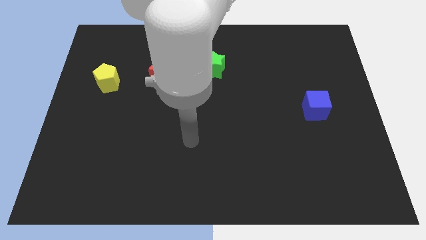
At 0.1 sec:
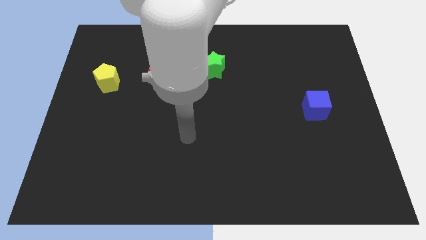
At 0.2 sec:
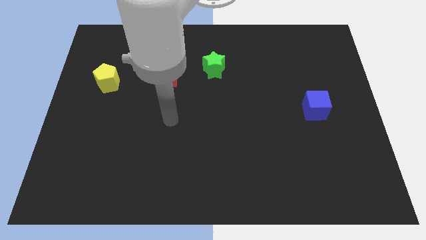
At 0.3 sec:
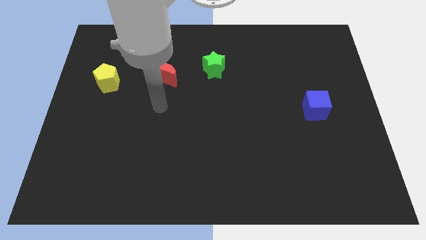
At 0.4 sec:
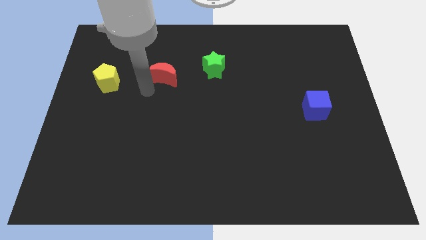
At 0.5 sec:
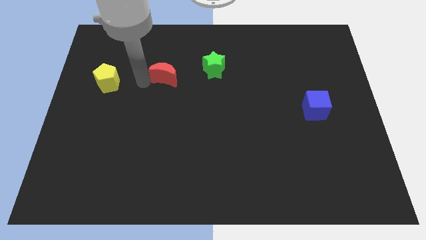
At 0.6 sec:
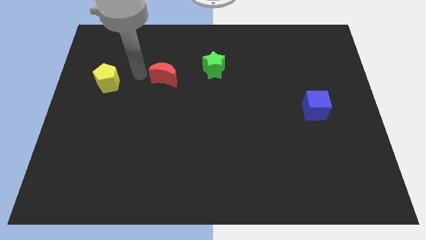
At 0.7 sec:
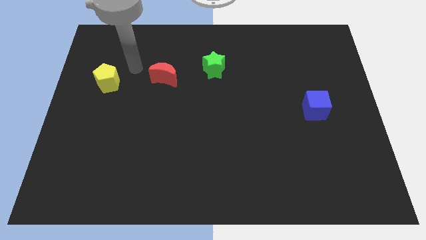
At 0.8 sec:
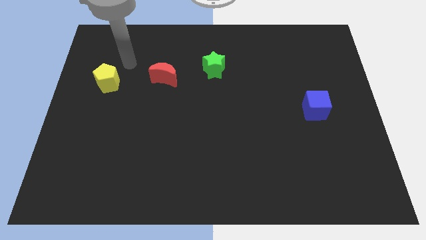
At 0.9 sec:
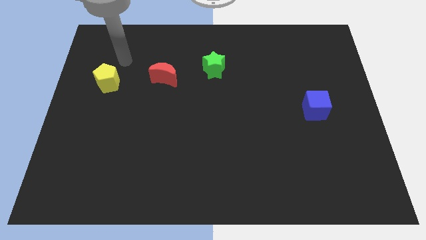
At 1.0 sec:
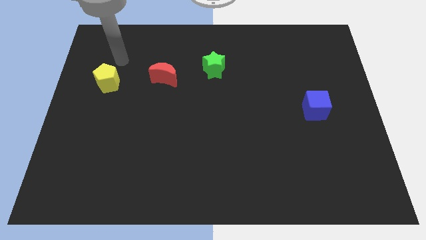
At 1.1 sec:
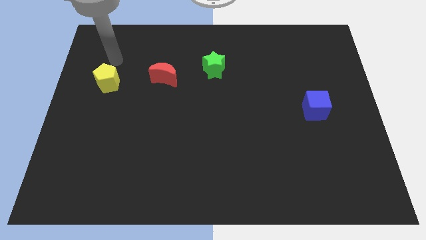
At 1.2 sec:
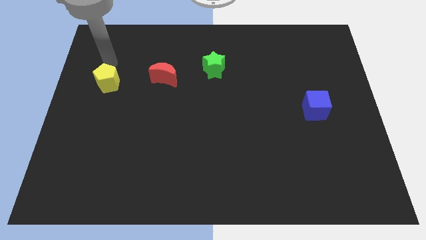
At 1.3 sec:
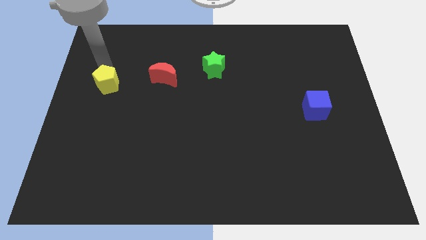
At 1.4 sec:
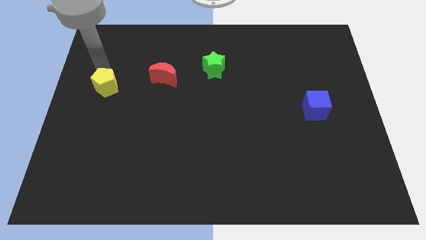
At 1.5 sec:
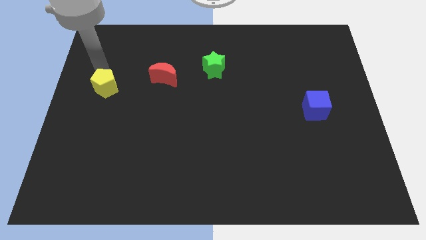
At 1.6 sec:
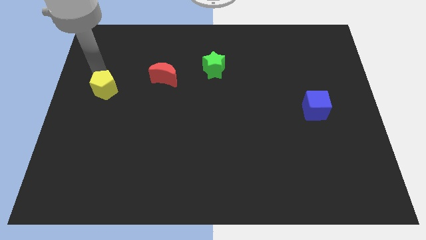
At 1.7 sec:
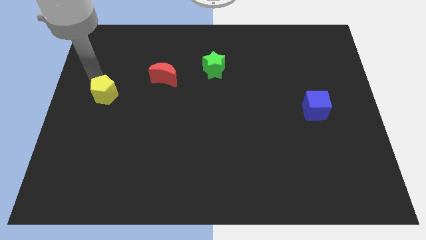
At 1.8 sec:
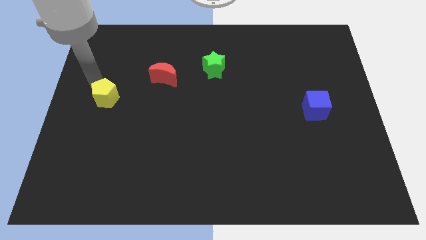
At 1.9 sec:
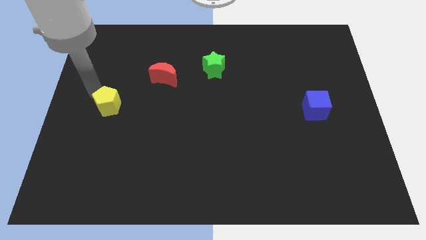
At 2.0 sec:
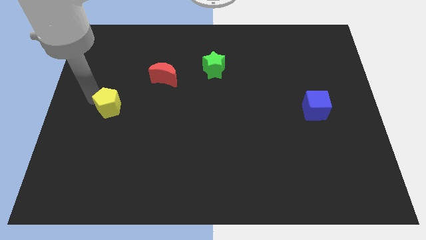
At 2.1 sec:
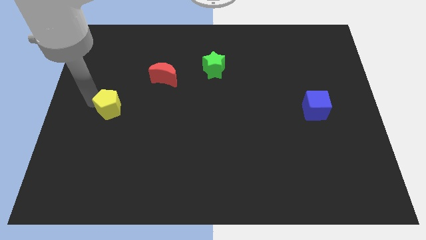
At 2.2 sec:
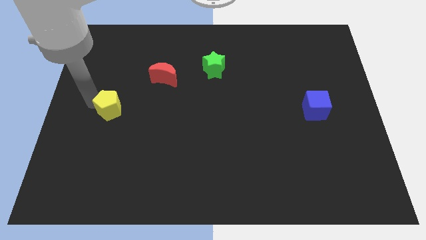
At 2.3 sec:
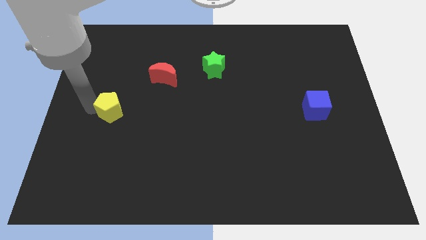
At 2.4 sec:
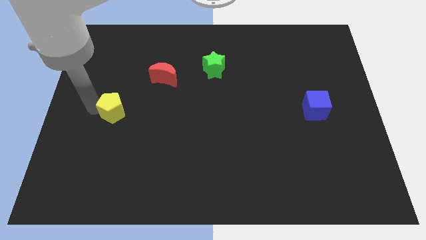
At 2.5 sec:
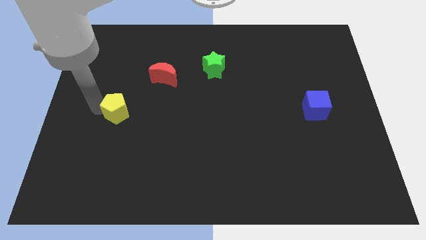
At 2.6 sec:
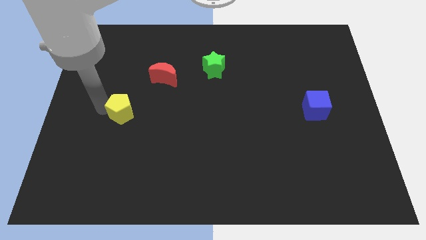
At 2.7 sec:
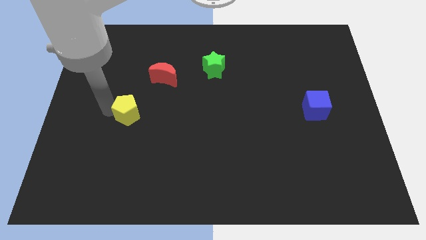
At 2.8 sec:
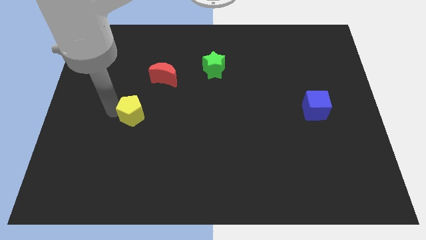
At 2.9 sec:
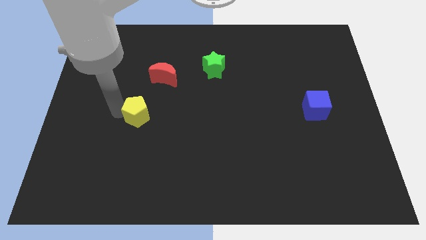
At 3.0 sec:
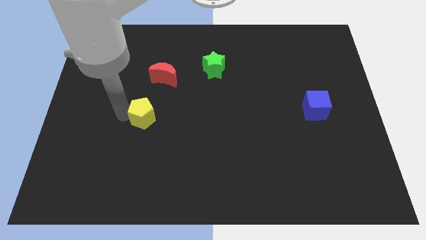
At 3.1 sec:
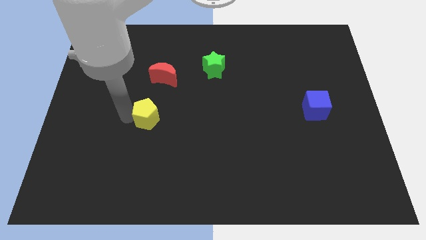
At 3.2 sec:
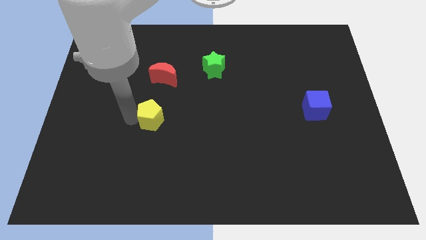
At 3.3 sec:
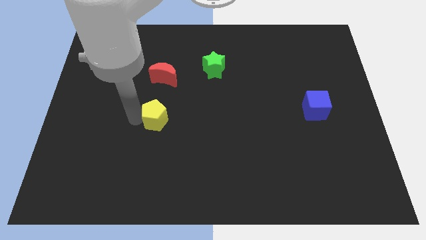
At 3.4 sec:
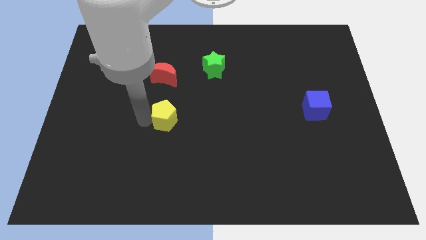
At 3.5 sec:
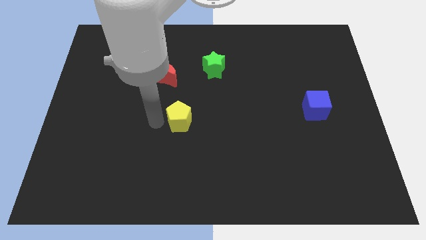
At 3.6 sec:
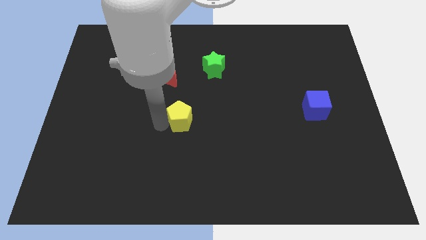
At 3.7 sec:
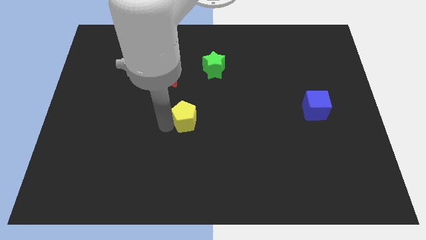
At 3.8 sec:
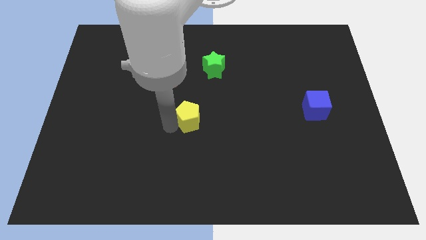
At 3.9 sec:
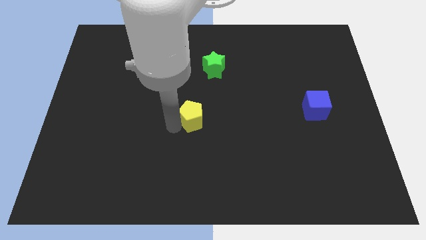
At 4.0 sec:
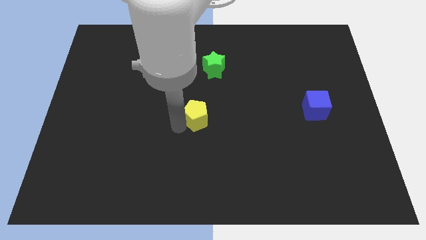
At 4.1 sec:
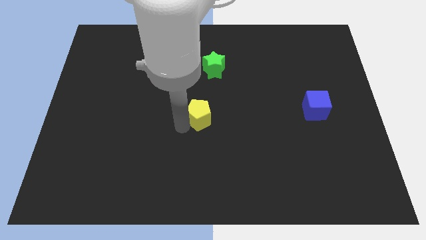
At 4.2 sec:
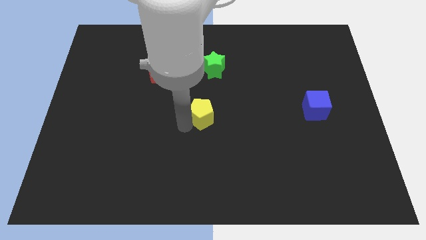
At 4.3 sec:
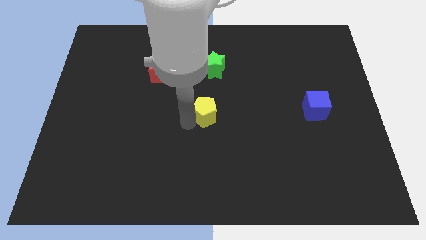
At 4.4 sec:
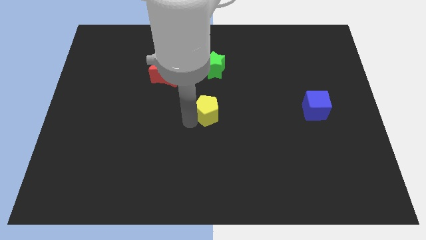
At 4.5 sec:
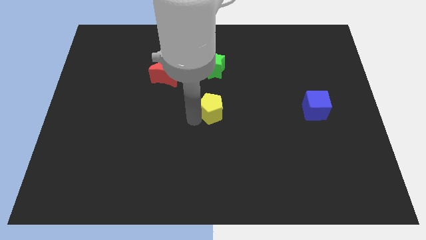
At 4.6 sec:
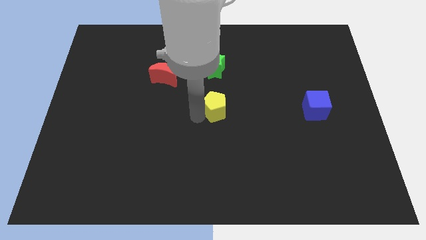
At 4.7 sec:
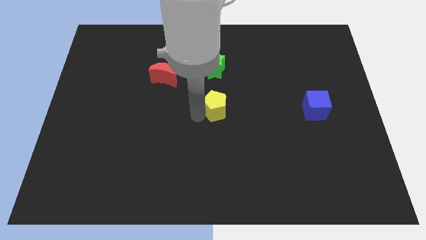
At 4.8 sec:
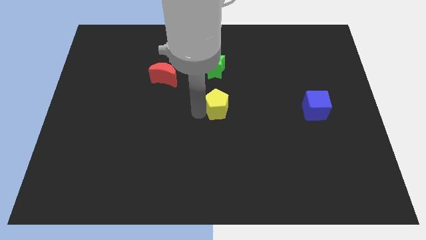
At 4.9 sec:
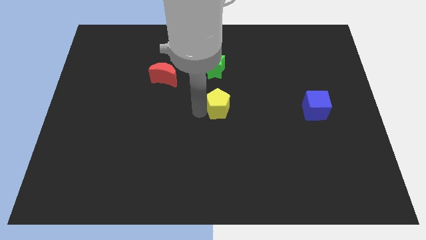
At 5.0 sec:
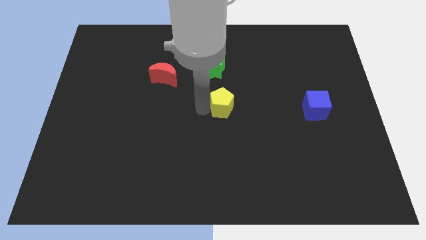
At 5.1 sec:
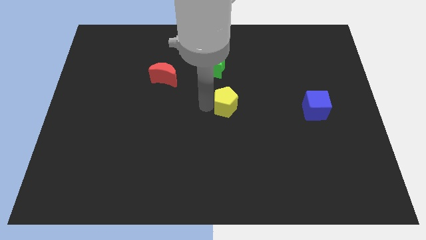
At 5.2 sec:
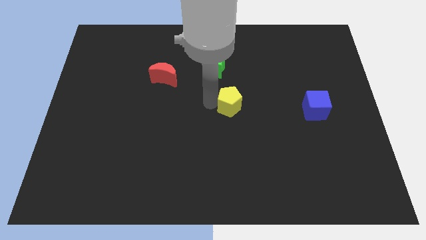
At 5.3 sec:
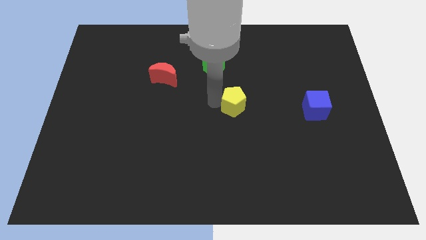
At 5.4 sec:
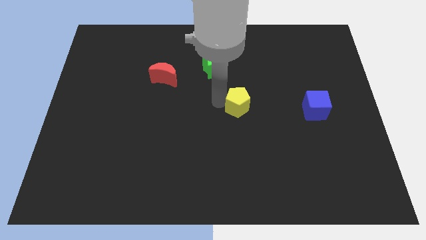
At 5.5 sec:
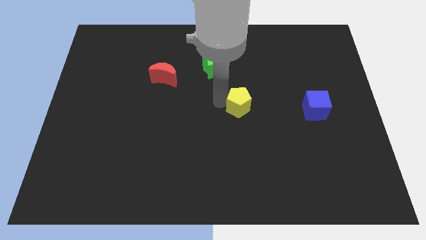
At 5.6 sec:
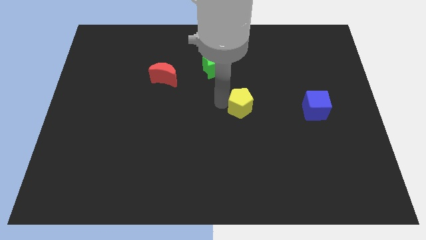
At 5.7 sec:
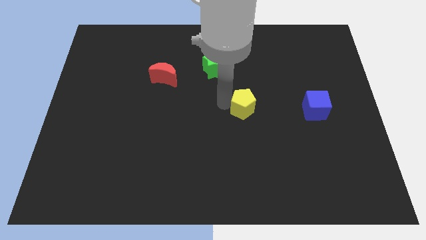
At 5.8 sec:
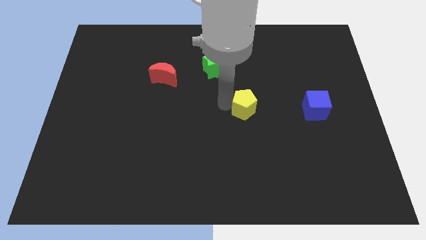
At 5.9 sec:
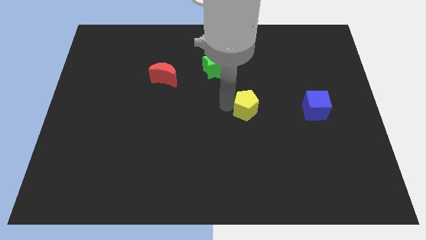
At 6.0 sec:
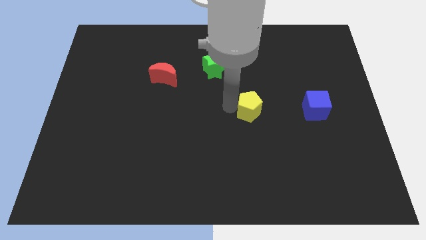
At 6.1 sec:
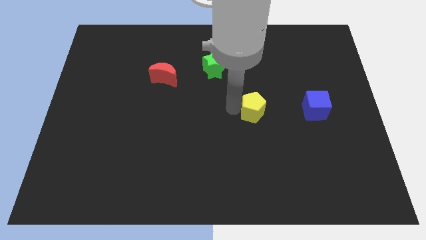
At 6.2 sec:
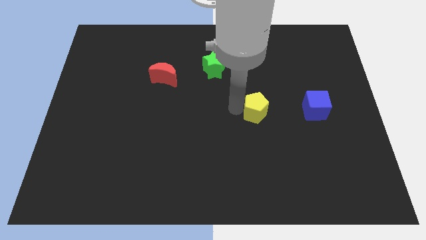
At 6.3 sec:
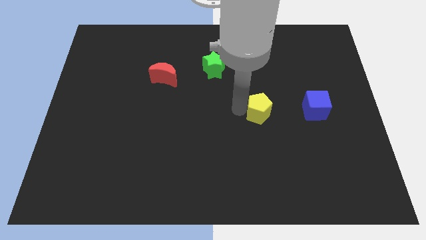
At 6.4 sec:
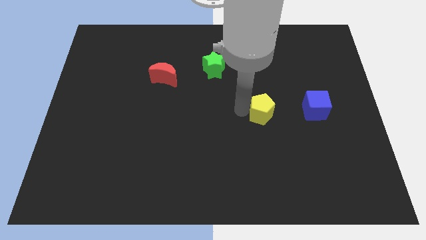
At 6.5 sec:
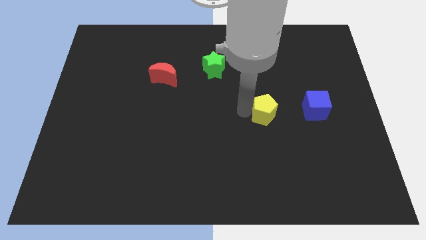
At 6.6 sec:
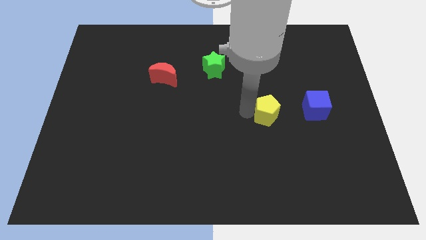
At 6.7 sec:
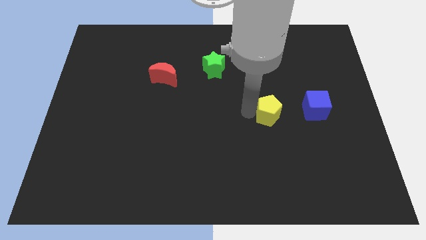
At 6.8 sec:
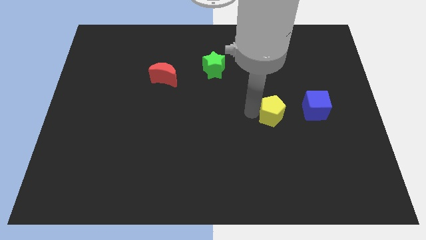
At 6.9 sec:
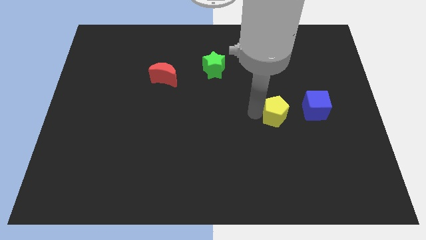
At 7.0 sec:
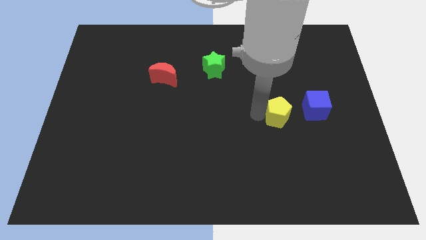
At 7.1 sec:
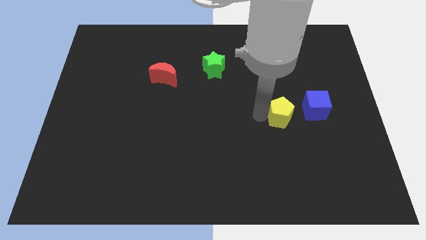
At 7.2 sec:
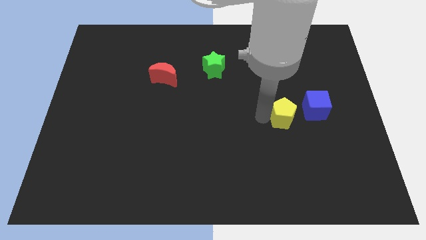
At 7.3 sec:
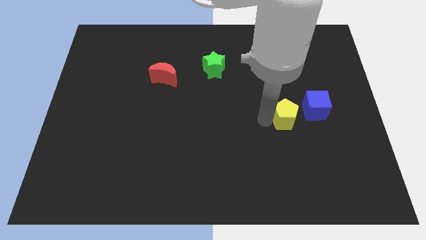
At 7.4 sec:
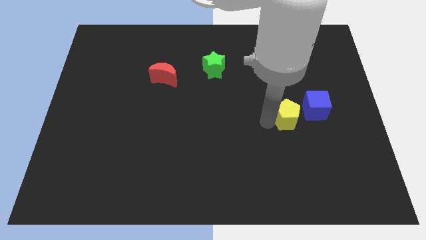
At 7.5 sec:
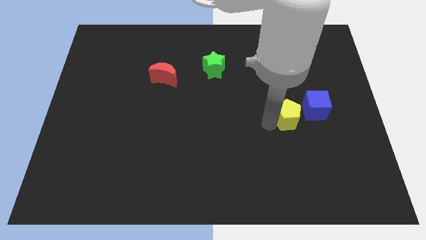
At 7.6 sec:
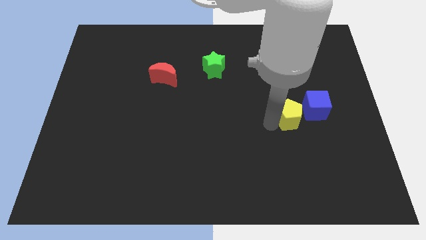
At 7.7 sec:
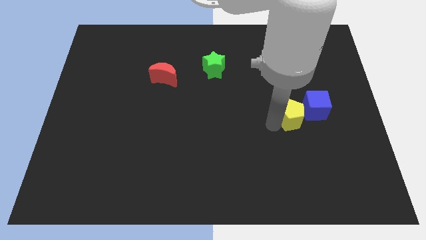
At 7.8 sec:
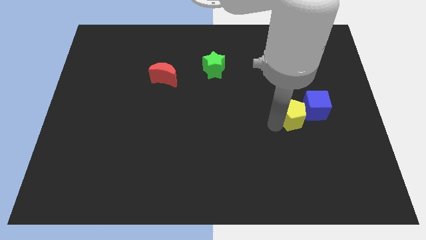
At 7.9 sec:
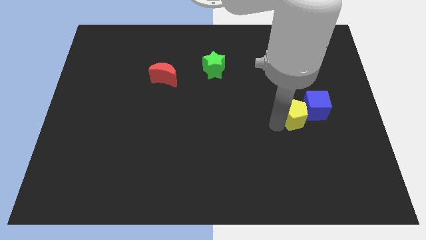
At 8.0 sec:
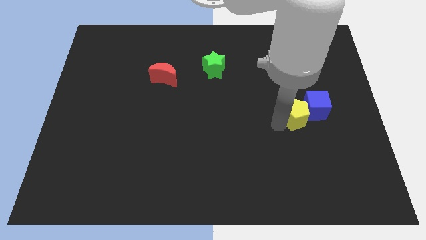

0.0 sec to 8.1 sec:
push the yellow block close to the blue cube

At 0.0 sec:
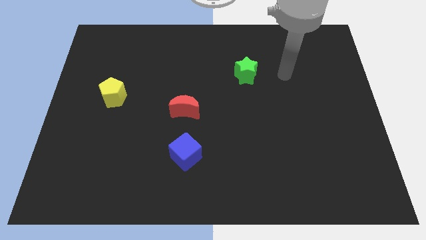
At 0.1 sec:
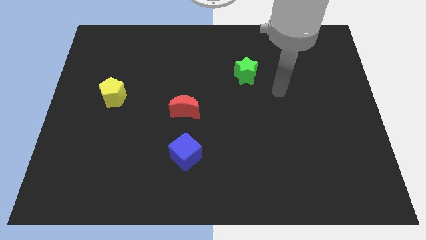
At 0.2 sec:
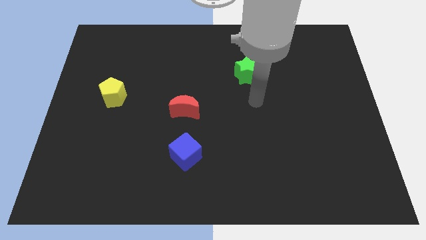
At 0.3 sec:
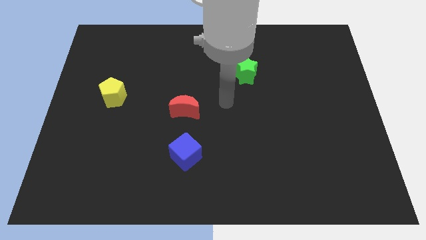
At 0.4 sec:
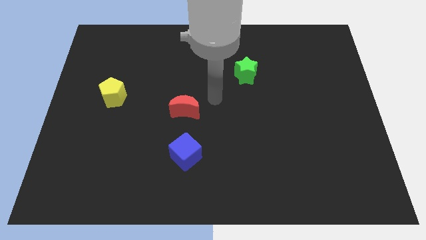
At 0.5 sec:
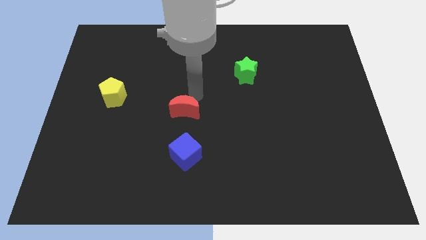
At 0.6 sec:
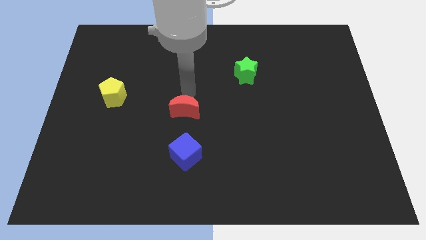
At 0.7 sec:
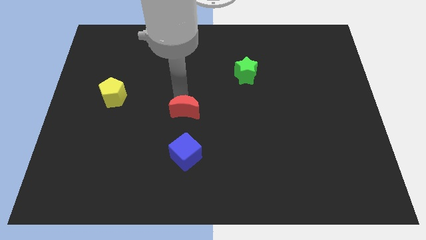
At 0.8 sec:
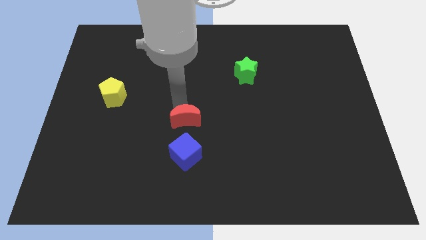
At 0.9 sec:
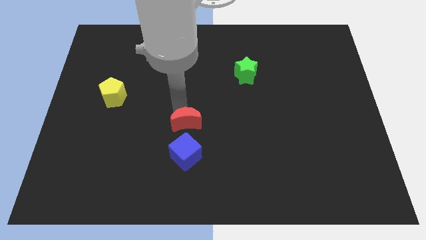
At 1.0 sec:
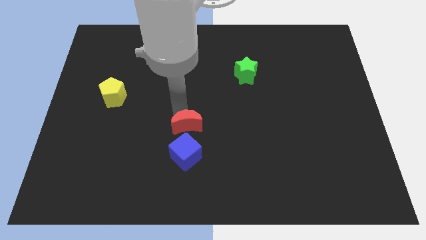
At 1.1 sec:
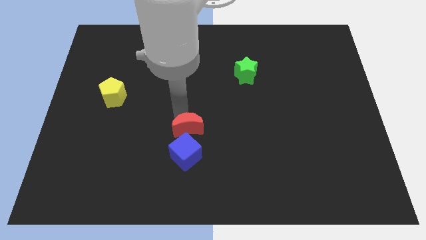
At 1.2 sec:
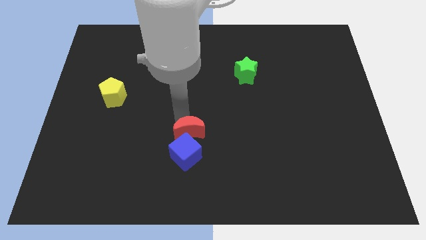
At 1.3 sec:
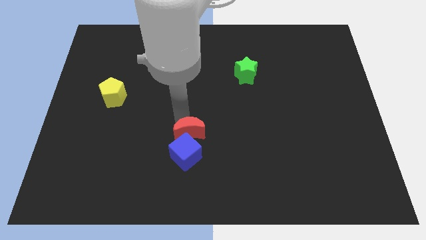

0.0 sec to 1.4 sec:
push the red block close to the blue cube
